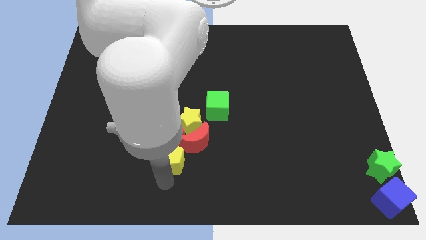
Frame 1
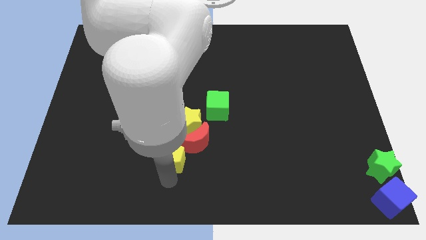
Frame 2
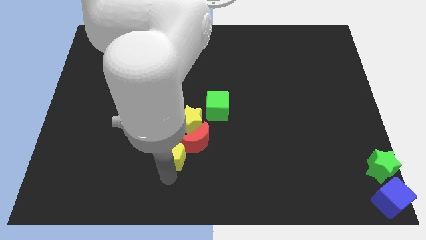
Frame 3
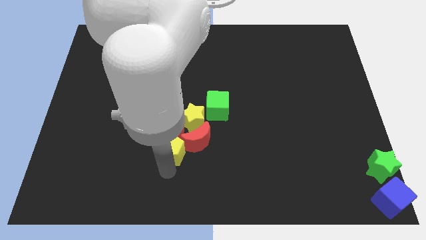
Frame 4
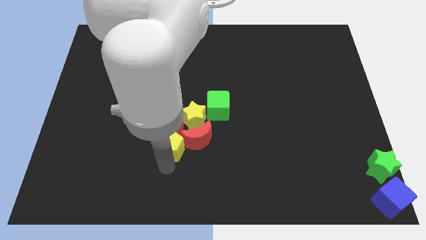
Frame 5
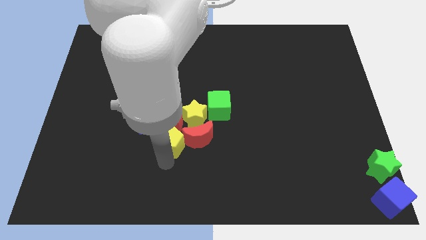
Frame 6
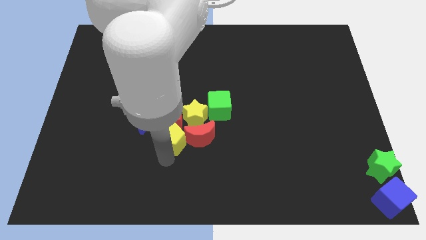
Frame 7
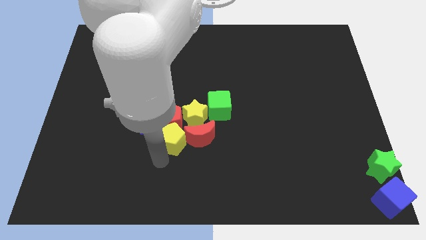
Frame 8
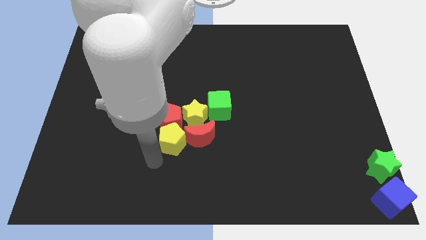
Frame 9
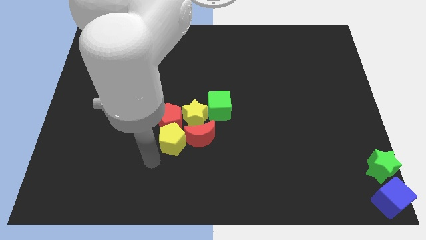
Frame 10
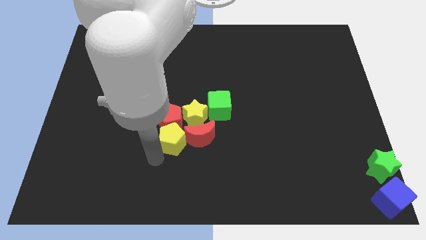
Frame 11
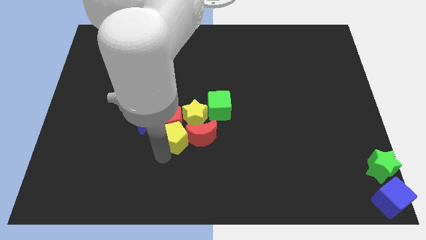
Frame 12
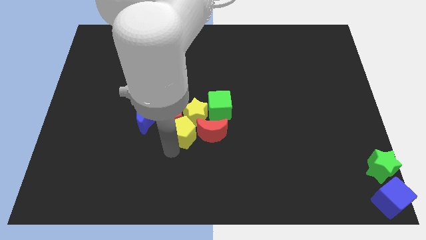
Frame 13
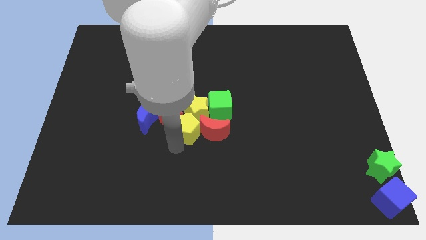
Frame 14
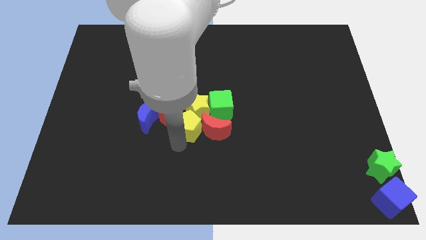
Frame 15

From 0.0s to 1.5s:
push yellow pentagon into red pentagon

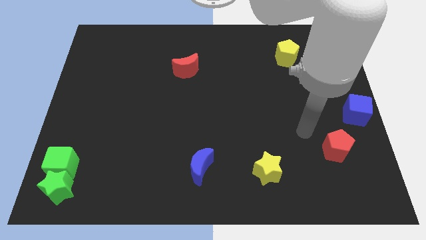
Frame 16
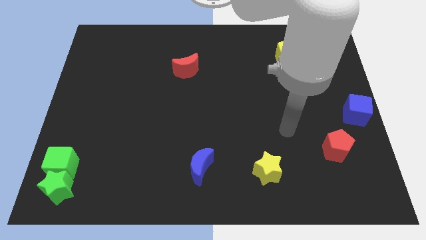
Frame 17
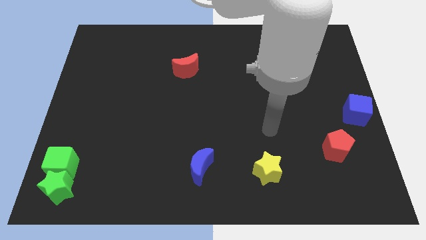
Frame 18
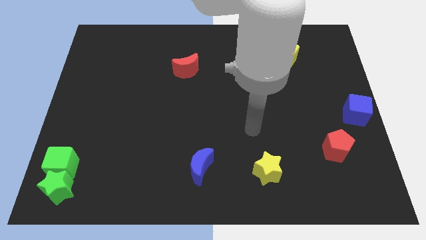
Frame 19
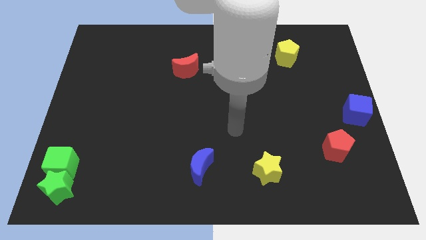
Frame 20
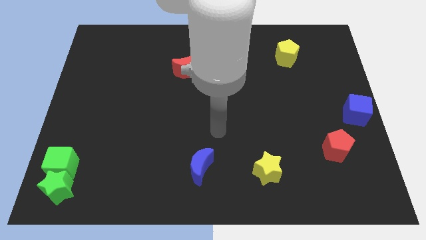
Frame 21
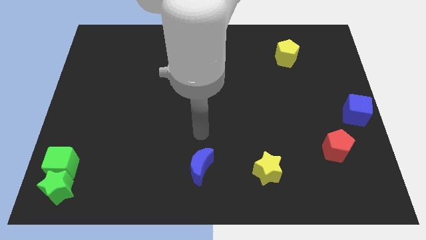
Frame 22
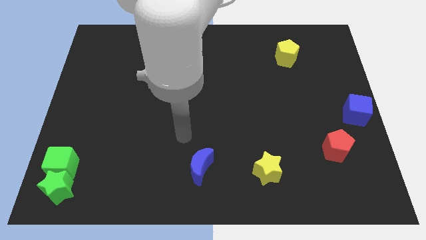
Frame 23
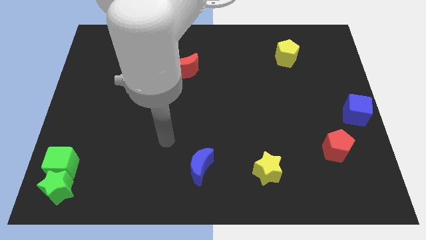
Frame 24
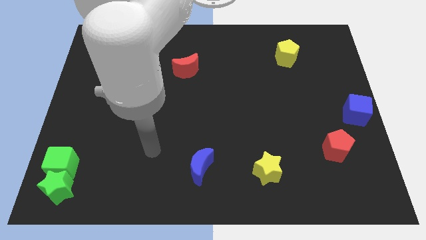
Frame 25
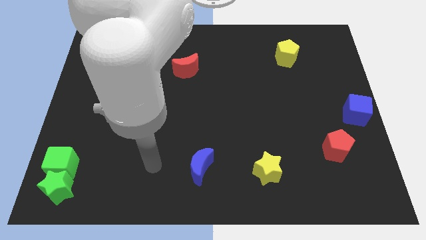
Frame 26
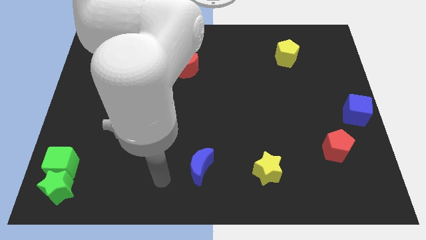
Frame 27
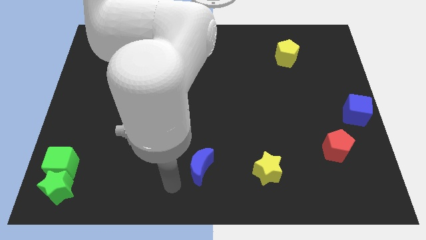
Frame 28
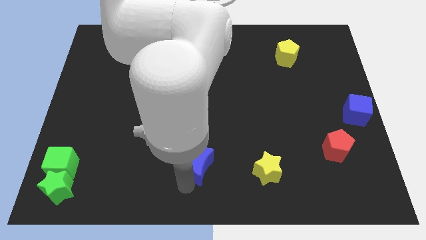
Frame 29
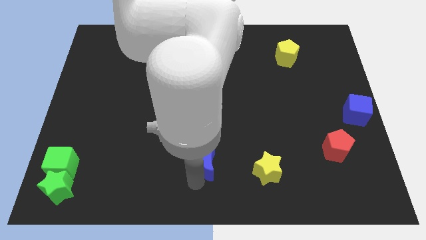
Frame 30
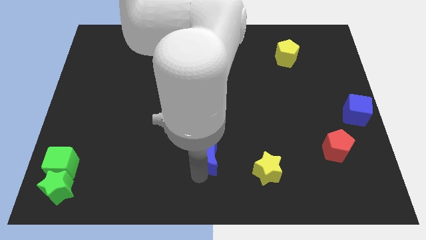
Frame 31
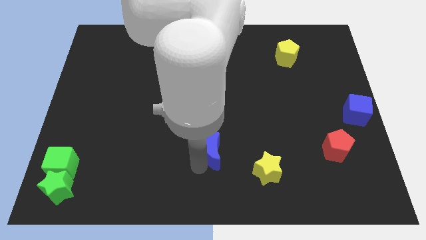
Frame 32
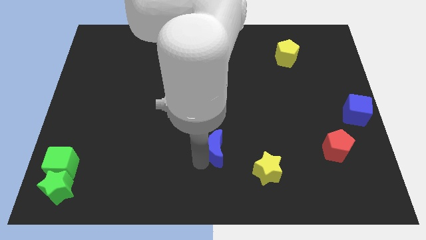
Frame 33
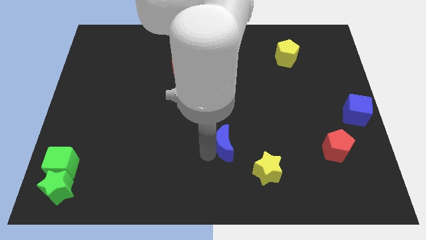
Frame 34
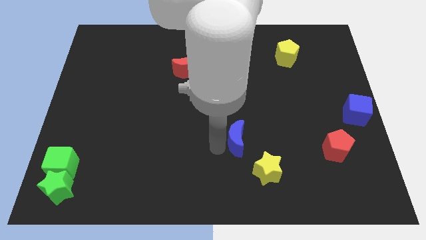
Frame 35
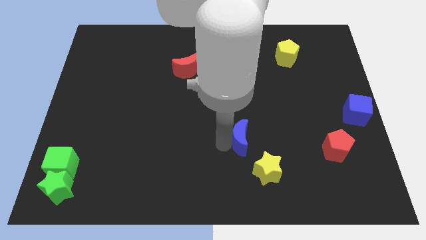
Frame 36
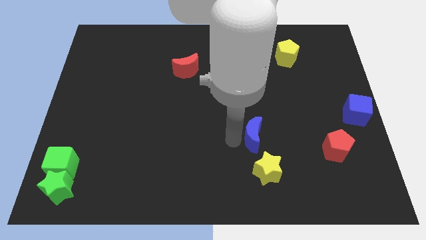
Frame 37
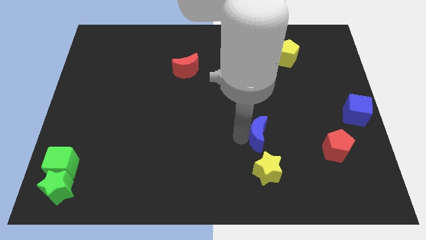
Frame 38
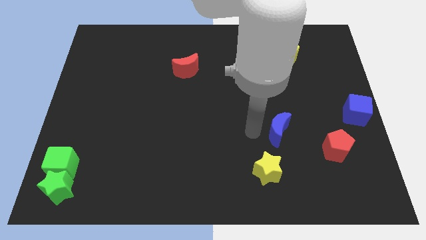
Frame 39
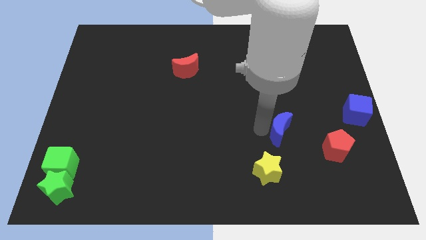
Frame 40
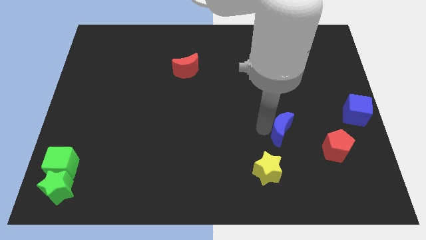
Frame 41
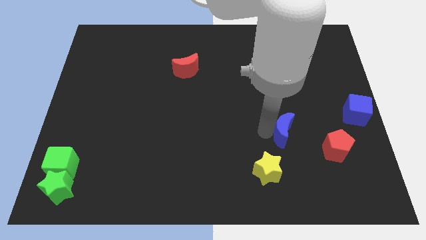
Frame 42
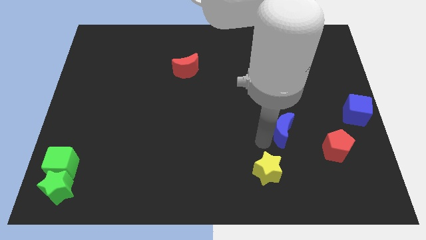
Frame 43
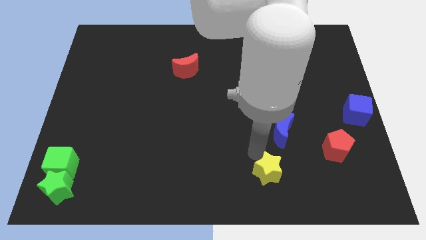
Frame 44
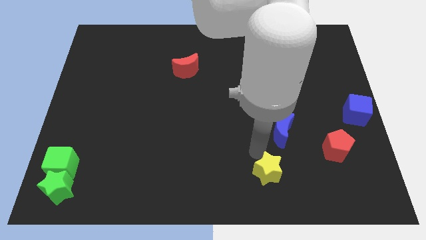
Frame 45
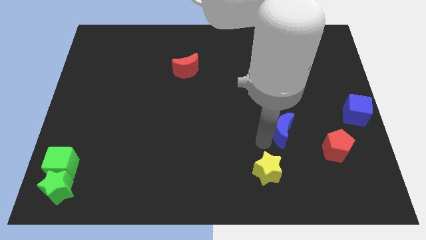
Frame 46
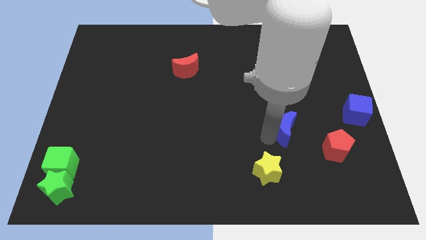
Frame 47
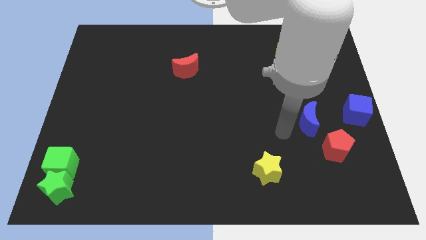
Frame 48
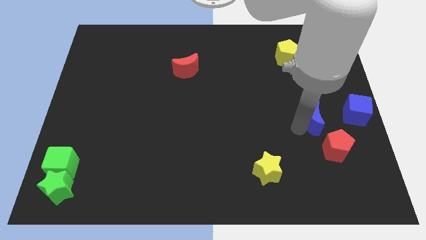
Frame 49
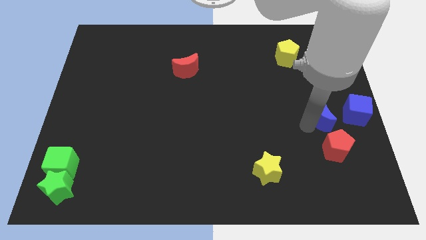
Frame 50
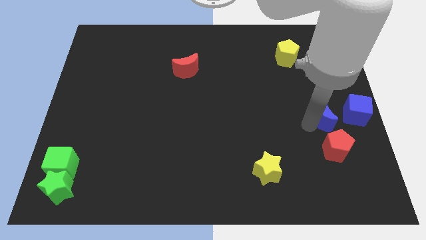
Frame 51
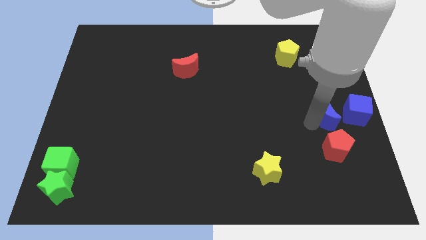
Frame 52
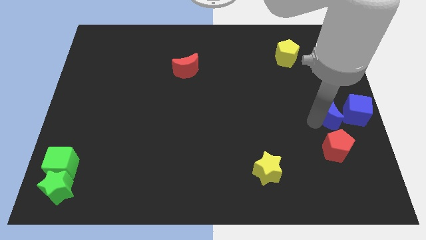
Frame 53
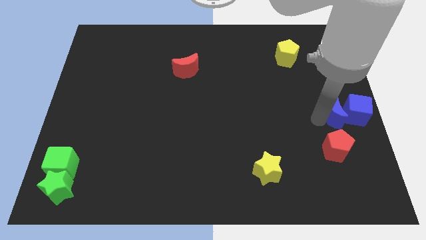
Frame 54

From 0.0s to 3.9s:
push the blue crescent to the top side of the red pentagon

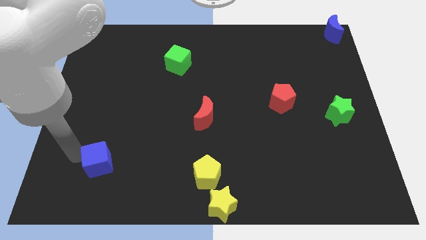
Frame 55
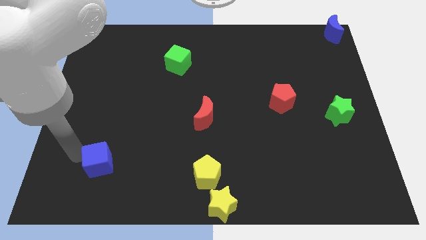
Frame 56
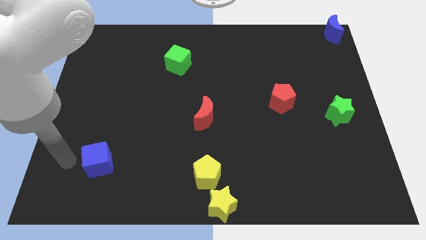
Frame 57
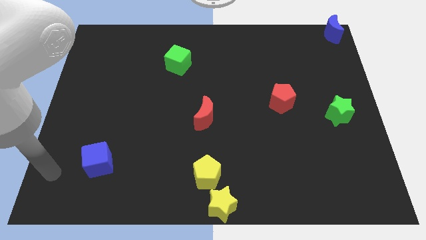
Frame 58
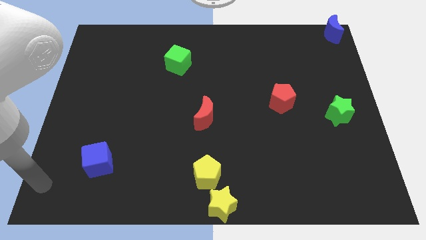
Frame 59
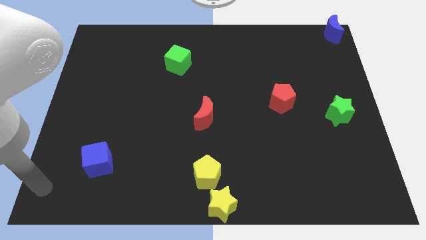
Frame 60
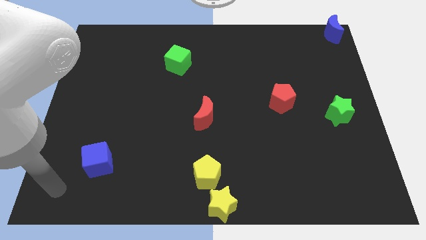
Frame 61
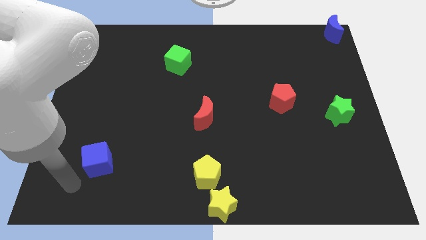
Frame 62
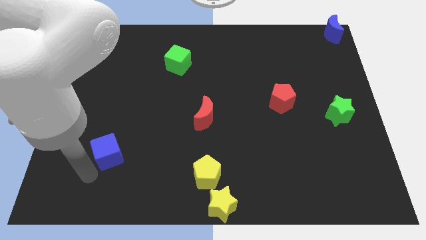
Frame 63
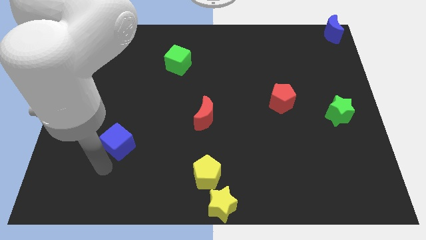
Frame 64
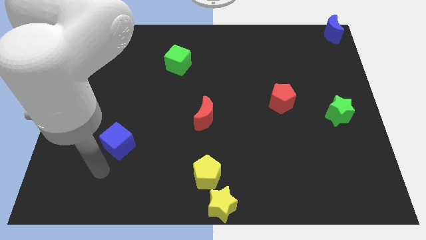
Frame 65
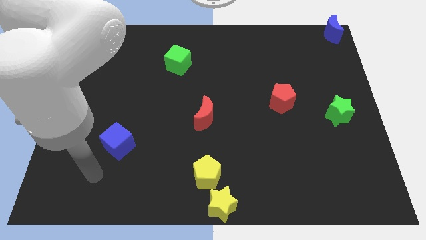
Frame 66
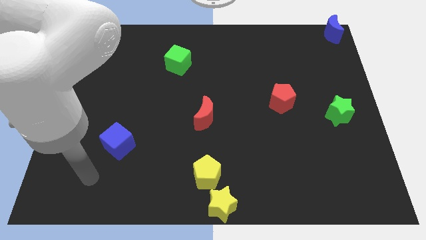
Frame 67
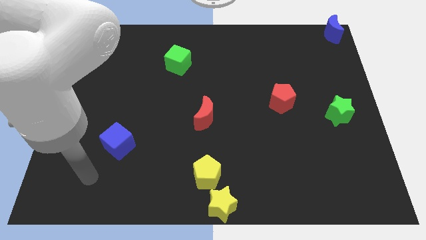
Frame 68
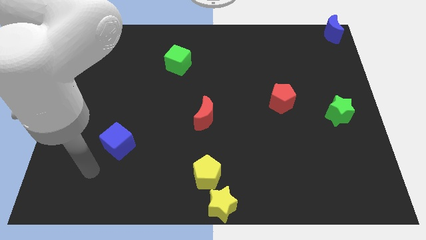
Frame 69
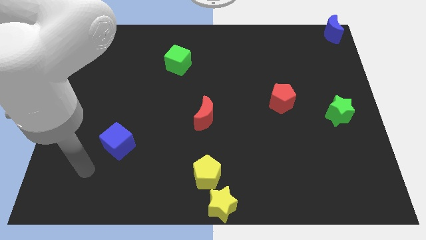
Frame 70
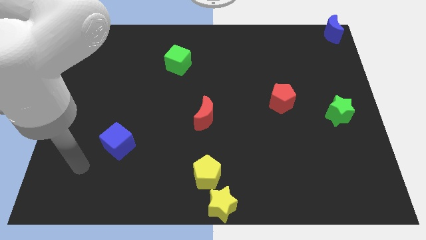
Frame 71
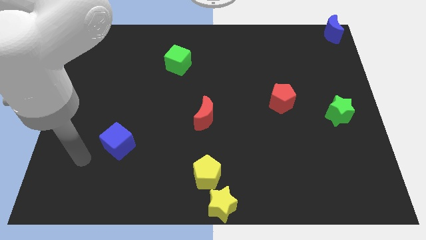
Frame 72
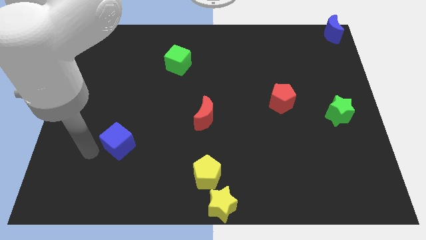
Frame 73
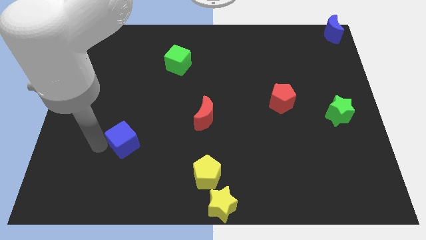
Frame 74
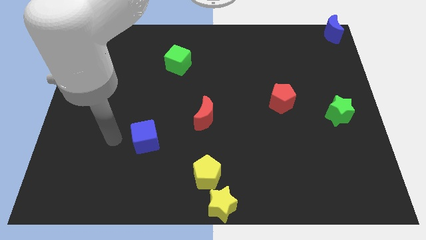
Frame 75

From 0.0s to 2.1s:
drag the blue cube to the diagonally on the bottom left side of the red moon

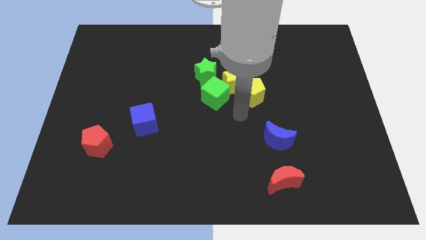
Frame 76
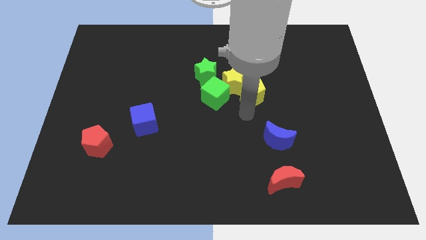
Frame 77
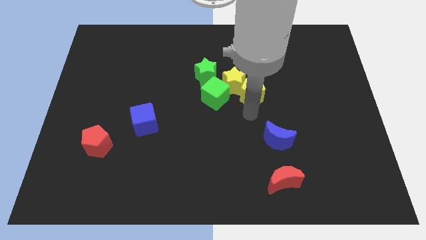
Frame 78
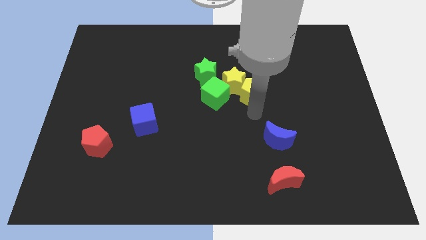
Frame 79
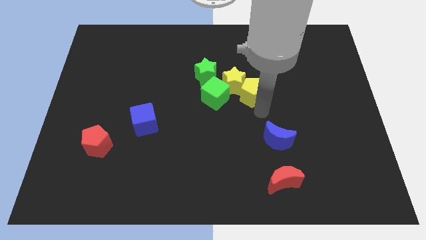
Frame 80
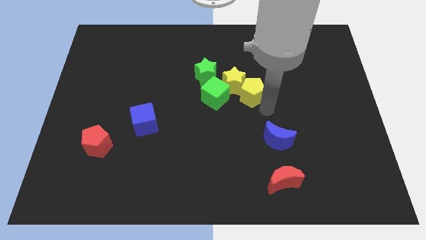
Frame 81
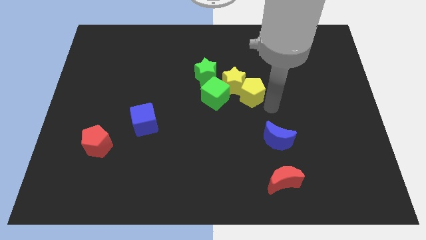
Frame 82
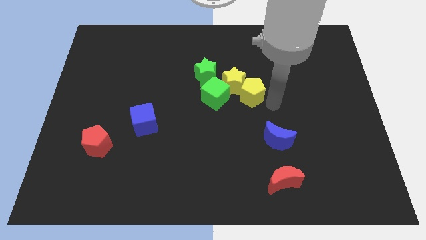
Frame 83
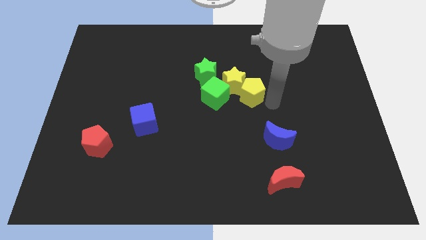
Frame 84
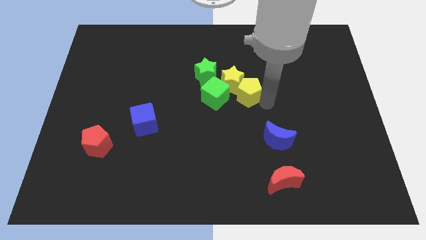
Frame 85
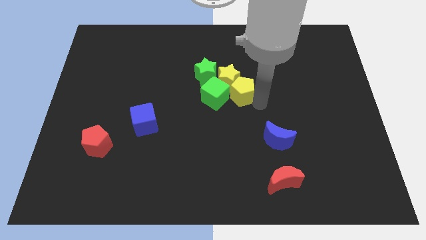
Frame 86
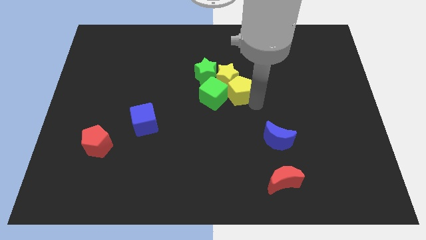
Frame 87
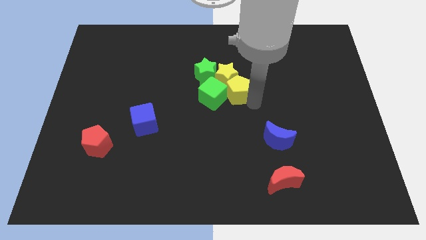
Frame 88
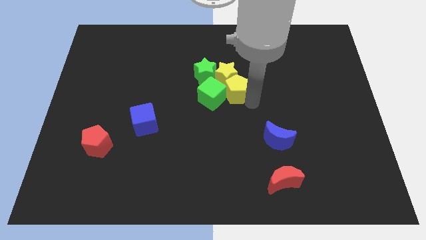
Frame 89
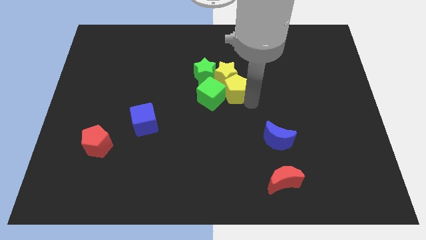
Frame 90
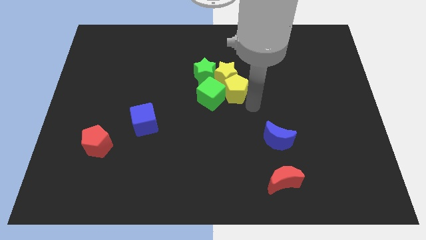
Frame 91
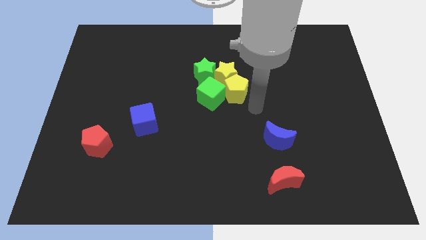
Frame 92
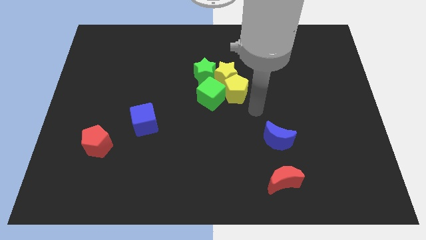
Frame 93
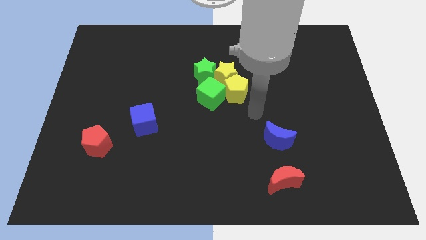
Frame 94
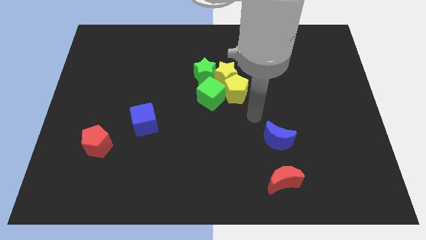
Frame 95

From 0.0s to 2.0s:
push the yellow pentagon slightly towards the yellow star
